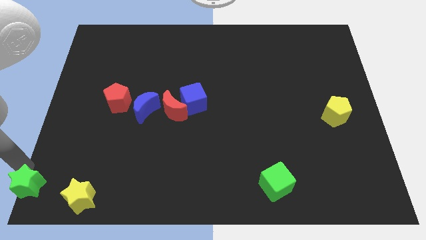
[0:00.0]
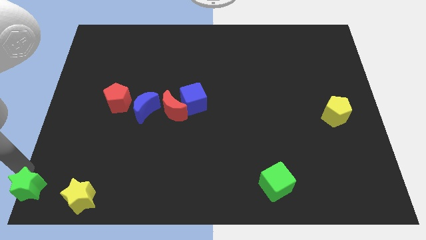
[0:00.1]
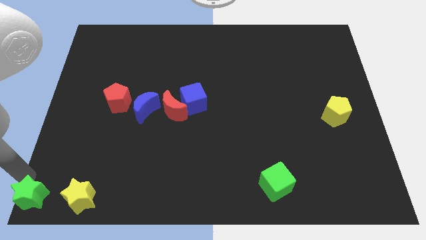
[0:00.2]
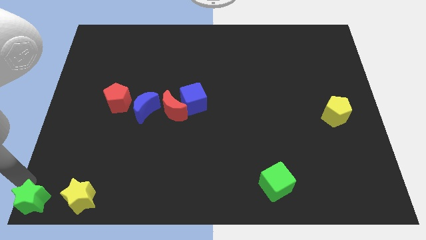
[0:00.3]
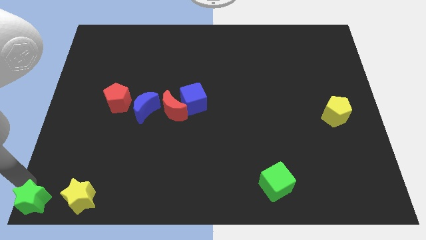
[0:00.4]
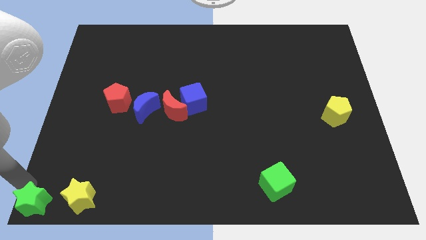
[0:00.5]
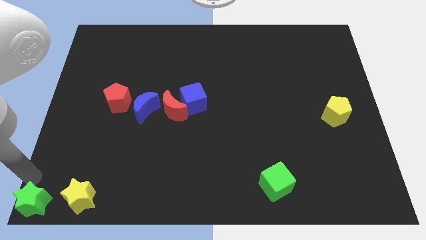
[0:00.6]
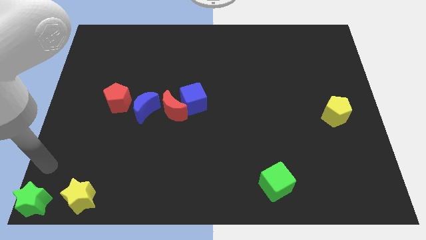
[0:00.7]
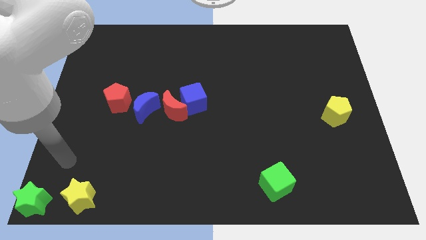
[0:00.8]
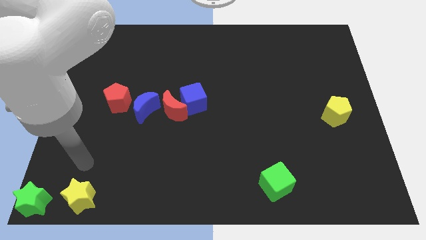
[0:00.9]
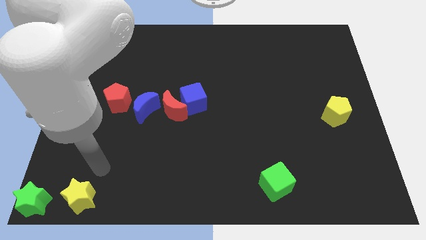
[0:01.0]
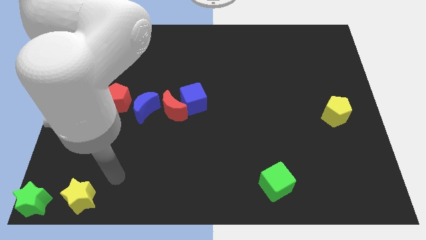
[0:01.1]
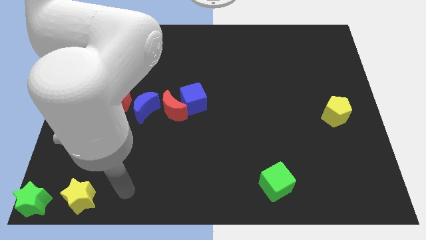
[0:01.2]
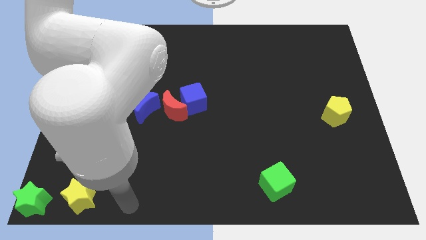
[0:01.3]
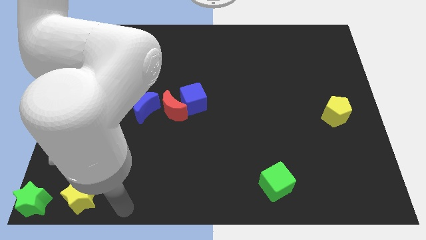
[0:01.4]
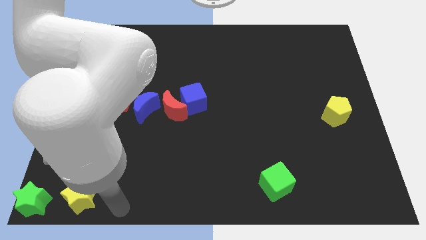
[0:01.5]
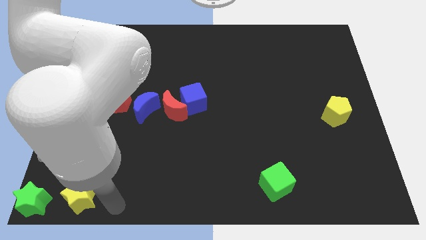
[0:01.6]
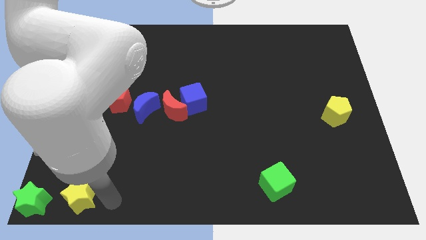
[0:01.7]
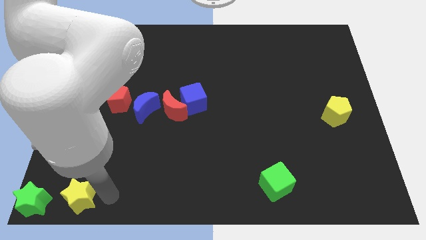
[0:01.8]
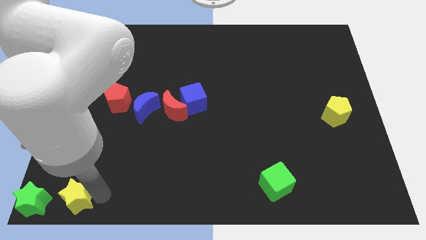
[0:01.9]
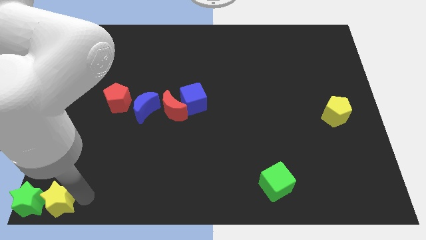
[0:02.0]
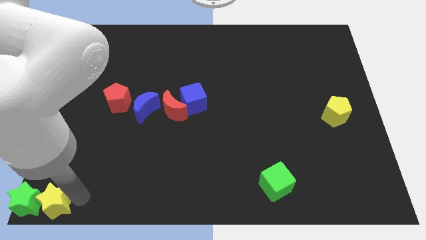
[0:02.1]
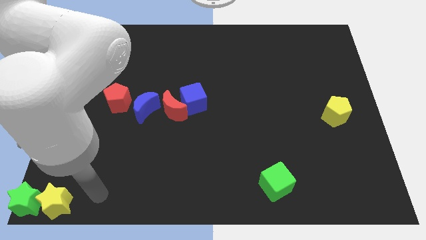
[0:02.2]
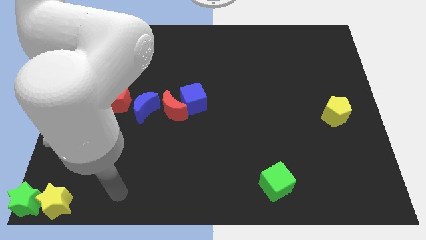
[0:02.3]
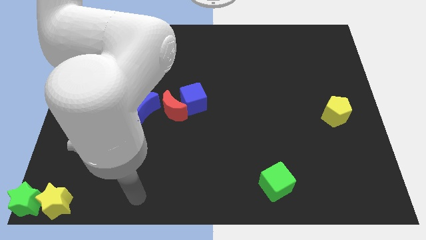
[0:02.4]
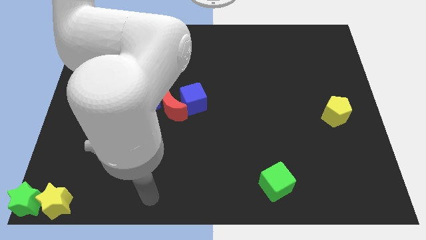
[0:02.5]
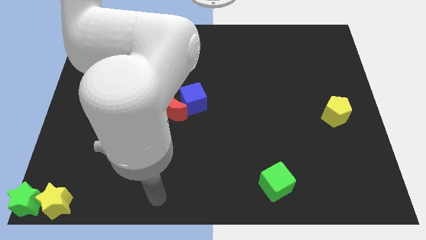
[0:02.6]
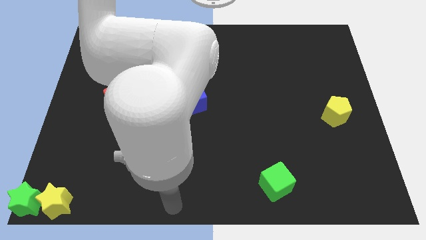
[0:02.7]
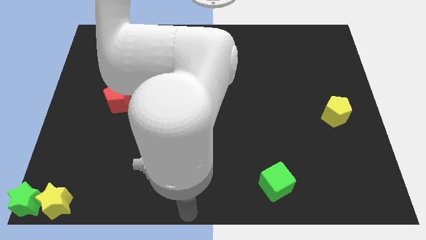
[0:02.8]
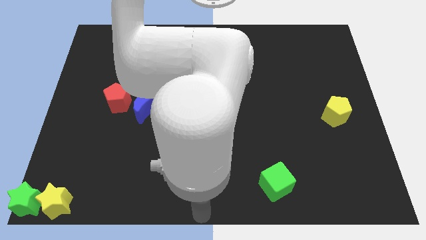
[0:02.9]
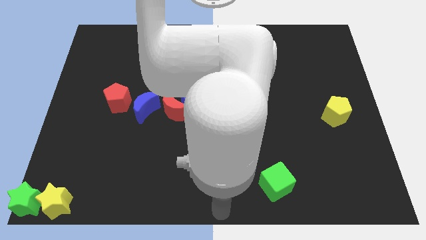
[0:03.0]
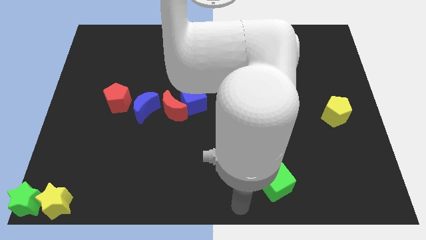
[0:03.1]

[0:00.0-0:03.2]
move the green star and yellow star to the bottom left corner of the board

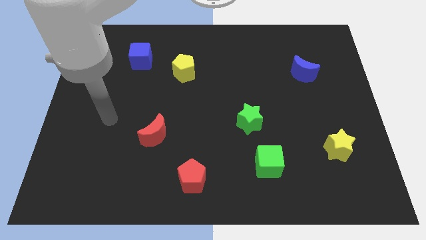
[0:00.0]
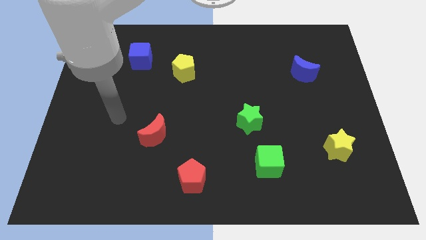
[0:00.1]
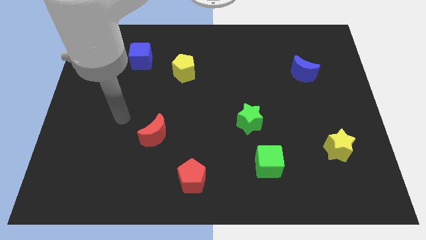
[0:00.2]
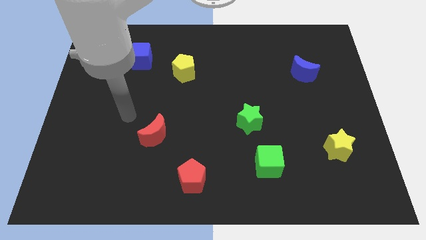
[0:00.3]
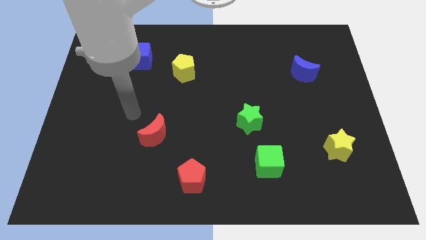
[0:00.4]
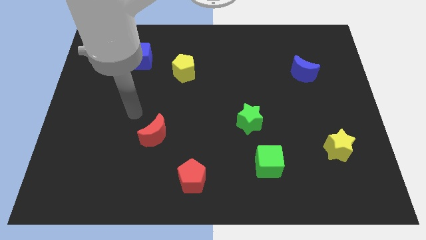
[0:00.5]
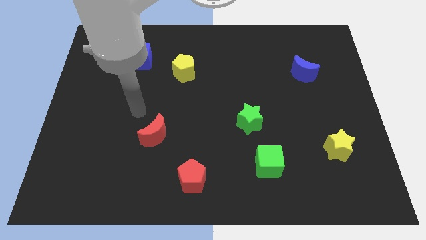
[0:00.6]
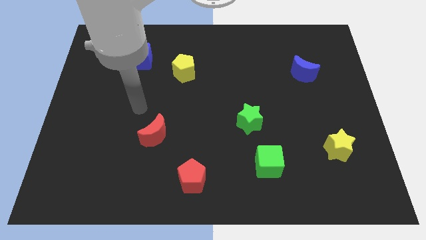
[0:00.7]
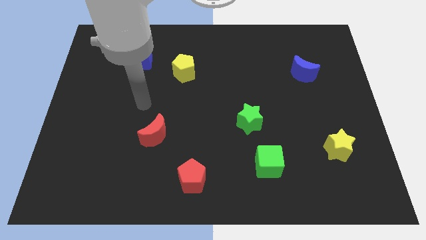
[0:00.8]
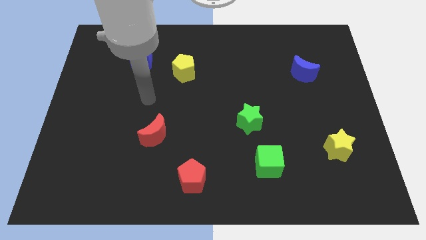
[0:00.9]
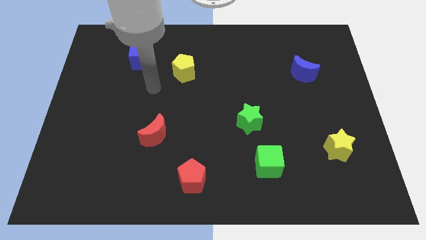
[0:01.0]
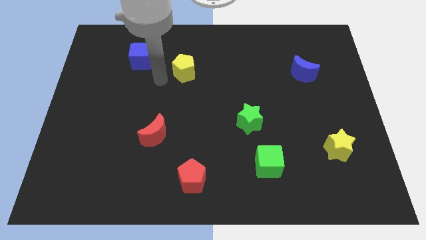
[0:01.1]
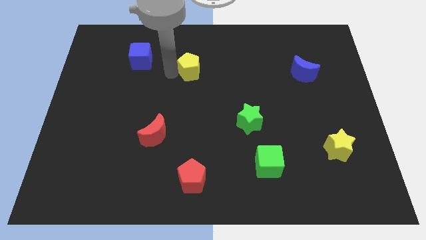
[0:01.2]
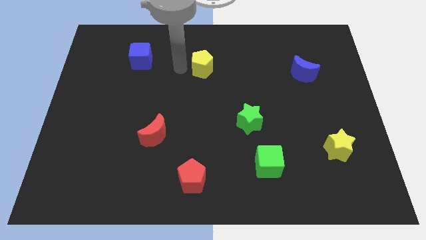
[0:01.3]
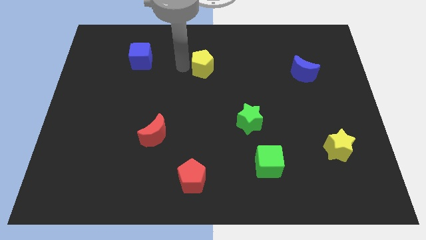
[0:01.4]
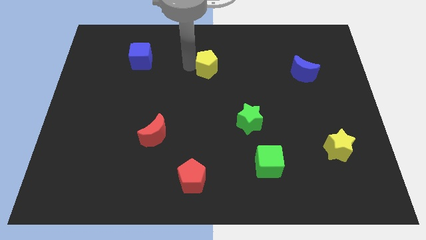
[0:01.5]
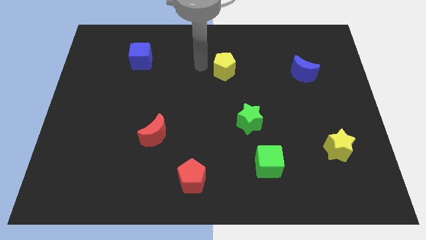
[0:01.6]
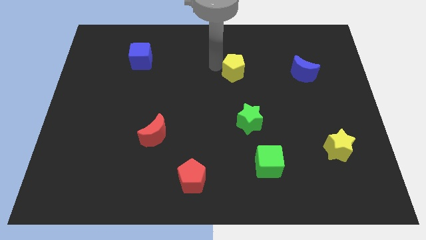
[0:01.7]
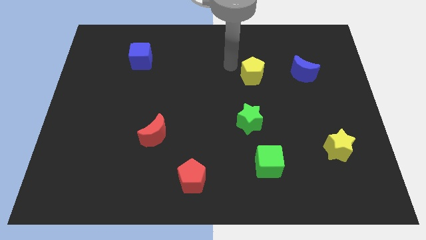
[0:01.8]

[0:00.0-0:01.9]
push the yellow pentagon towards the blue moon

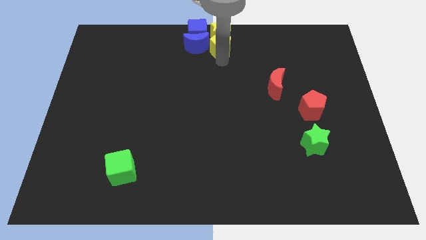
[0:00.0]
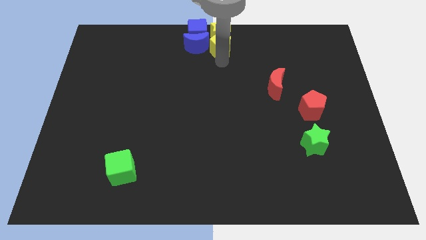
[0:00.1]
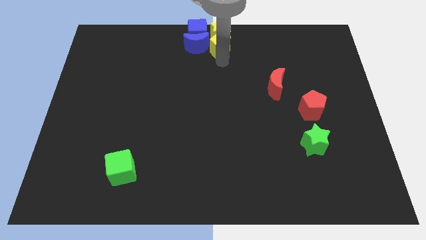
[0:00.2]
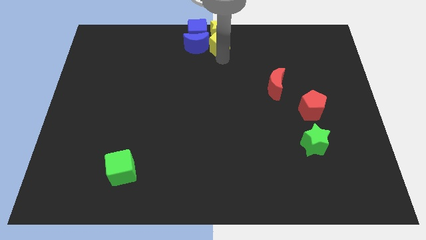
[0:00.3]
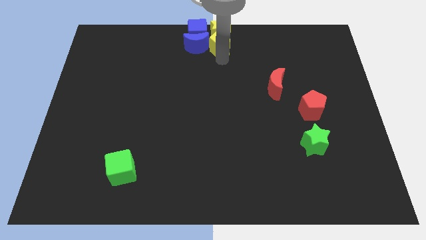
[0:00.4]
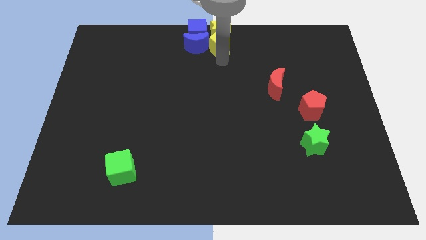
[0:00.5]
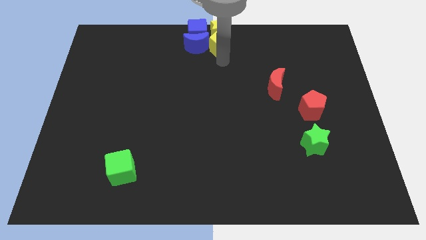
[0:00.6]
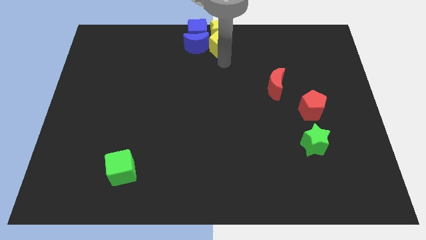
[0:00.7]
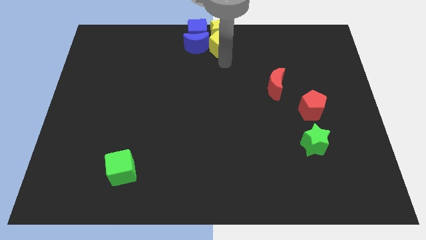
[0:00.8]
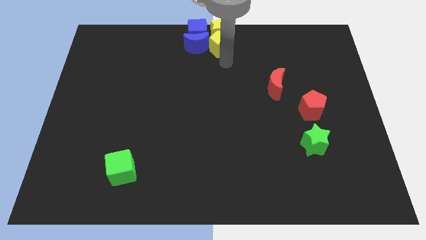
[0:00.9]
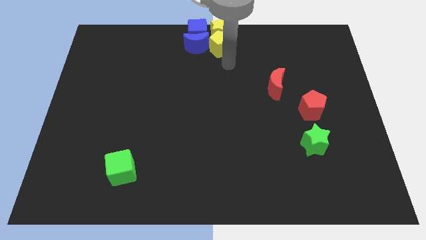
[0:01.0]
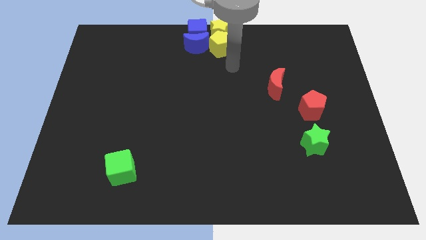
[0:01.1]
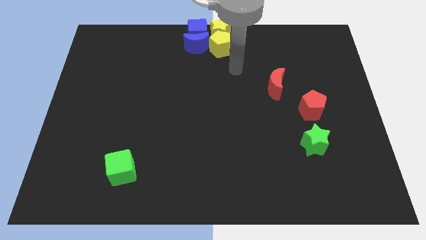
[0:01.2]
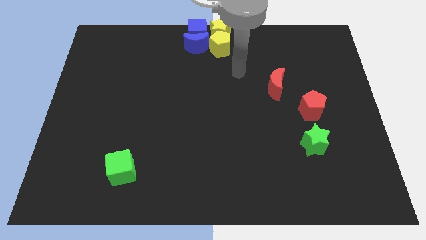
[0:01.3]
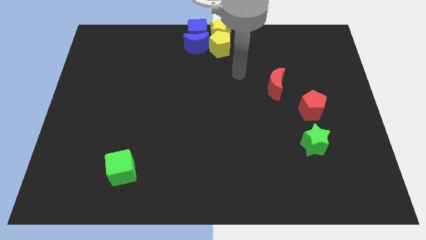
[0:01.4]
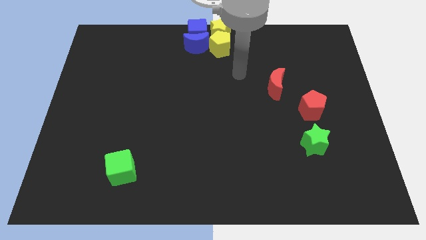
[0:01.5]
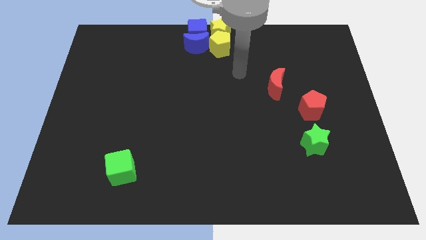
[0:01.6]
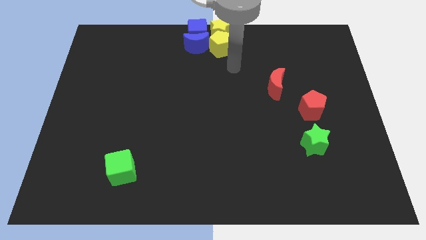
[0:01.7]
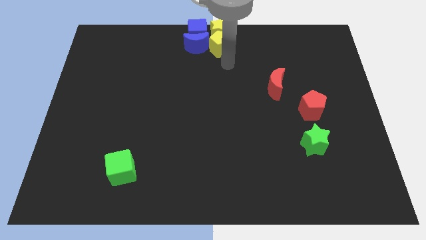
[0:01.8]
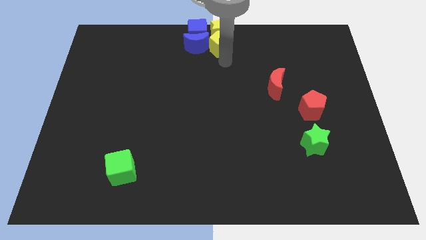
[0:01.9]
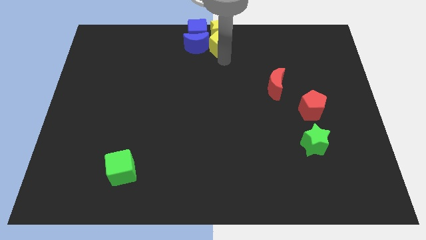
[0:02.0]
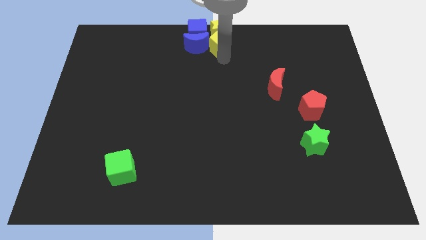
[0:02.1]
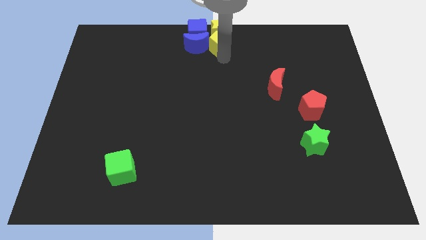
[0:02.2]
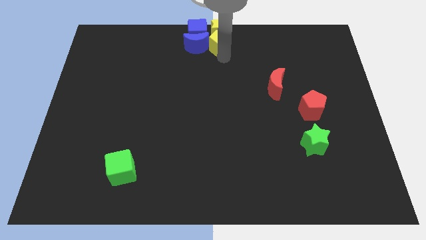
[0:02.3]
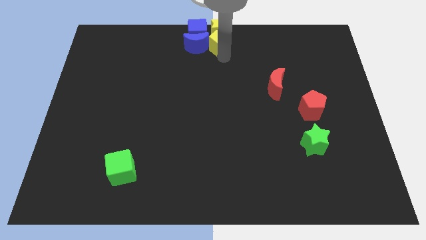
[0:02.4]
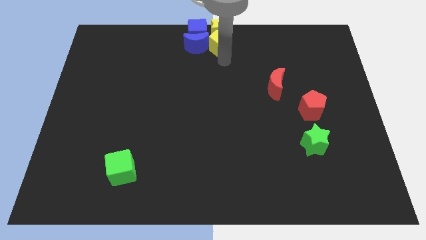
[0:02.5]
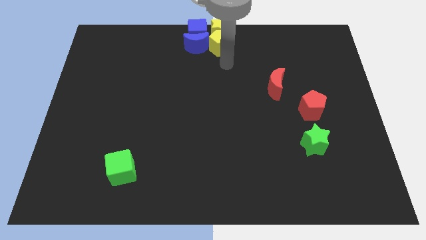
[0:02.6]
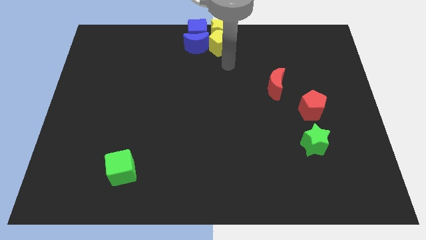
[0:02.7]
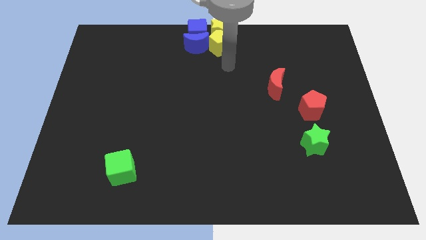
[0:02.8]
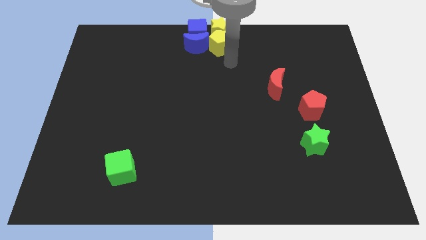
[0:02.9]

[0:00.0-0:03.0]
adjust the group of yellow blocks to the right side of the group of blue blocks

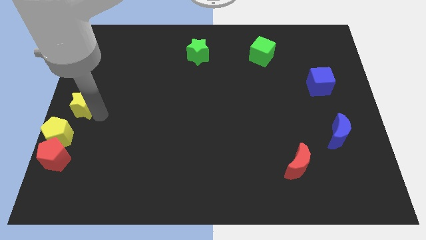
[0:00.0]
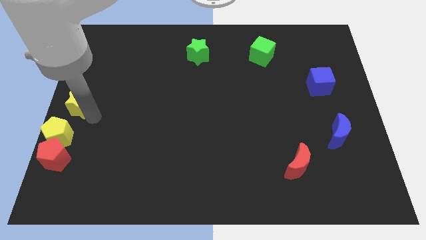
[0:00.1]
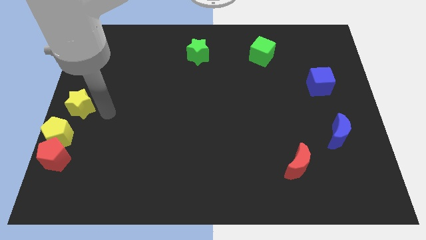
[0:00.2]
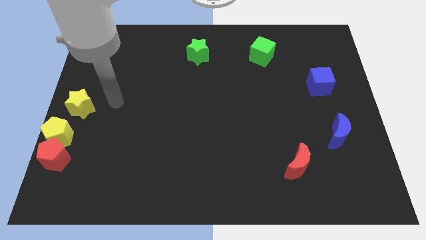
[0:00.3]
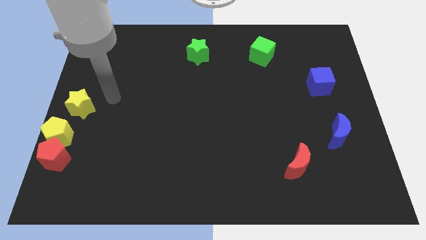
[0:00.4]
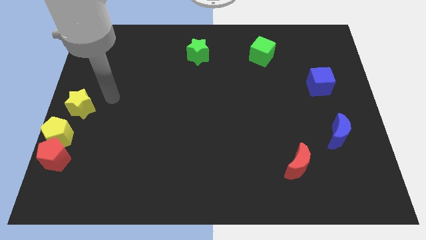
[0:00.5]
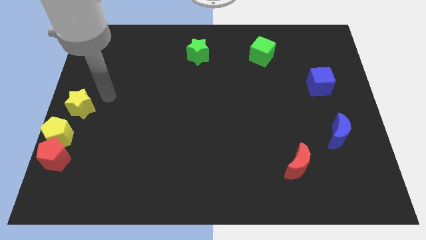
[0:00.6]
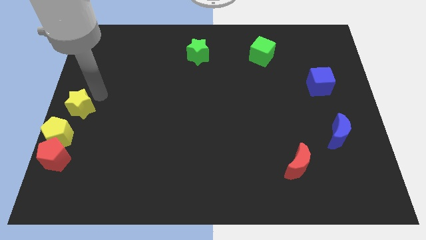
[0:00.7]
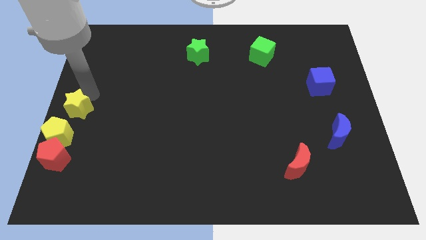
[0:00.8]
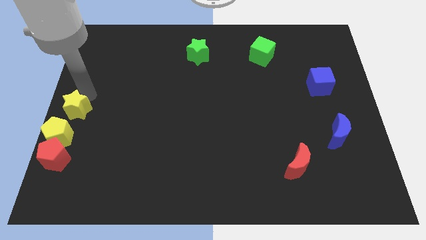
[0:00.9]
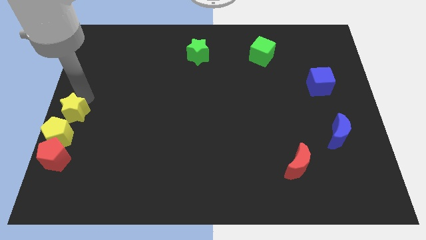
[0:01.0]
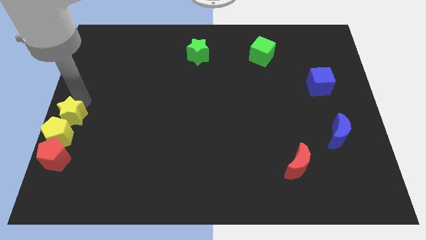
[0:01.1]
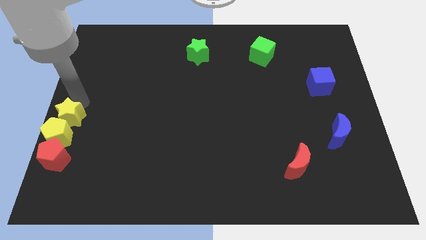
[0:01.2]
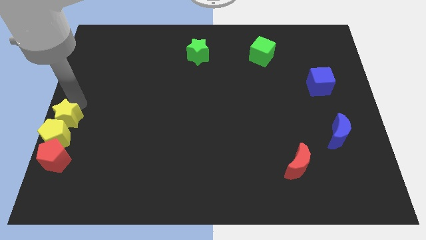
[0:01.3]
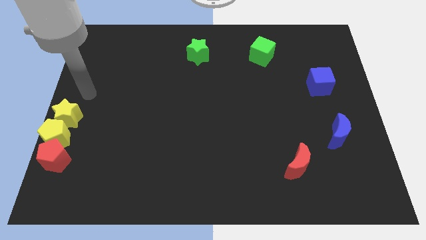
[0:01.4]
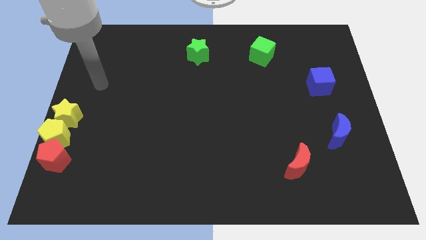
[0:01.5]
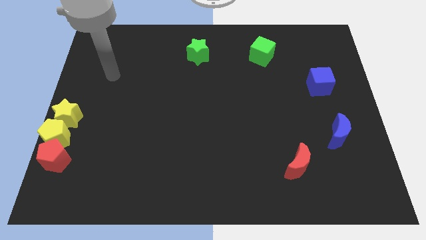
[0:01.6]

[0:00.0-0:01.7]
move yellow star above yellow pentagon
